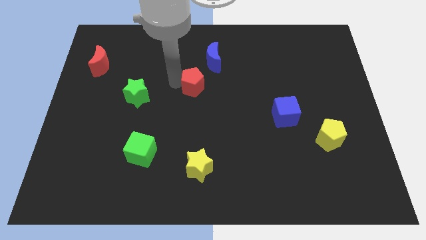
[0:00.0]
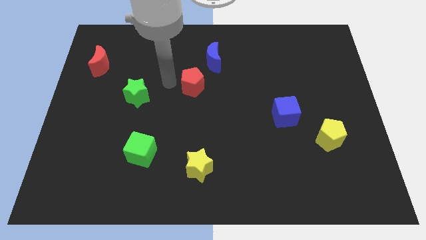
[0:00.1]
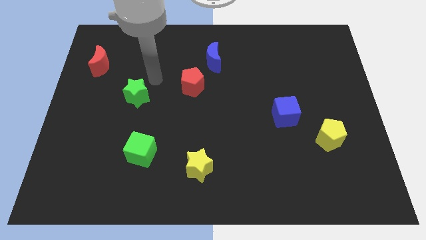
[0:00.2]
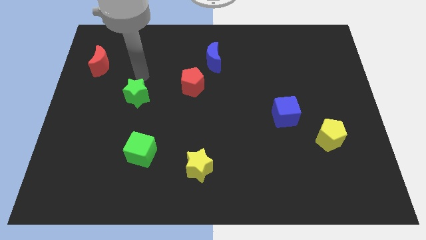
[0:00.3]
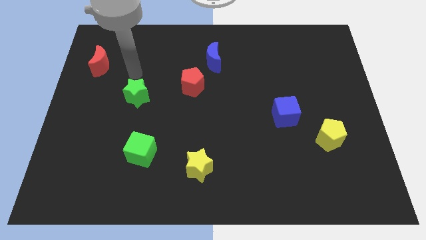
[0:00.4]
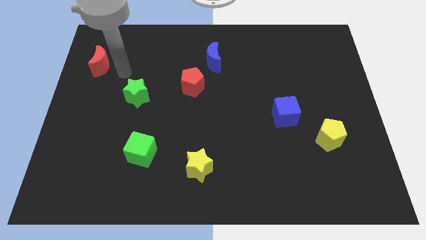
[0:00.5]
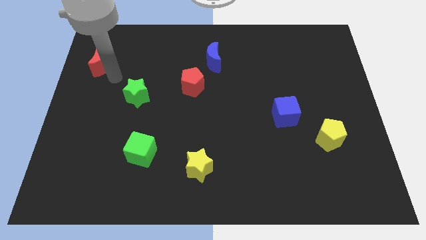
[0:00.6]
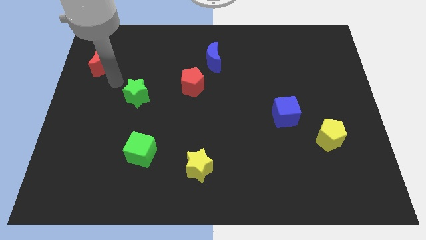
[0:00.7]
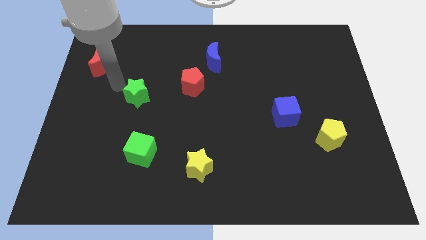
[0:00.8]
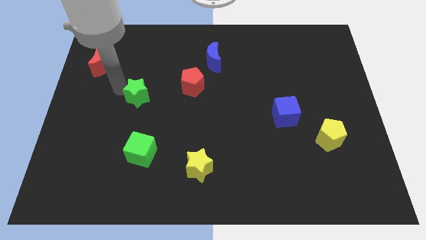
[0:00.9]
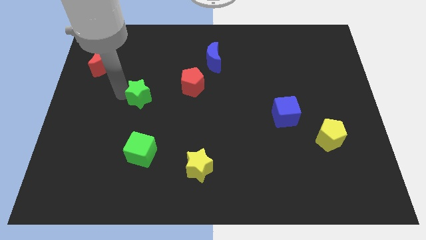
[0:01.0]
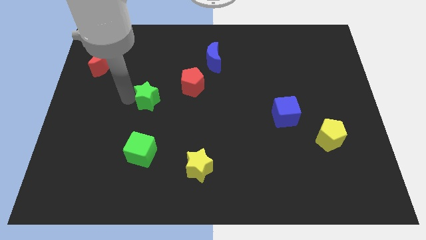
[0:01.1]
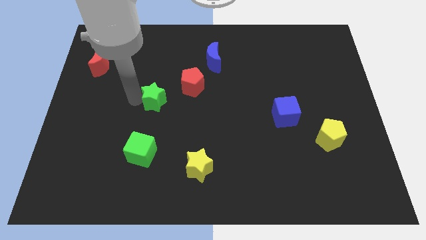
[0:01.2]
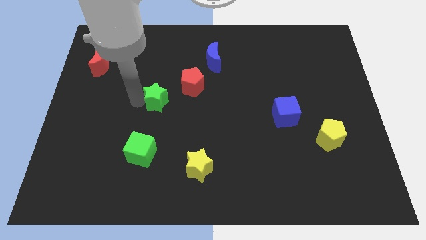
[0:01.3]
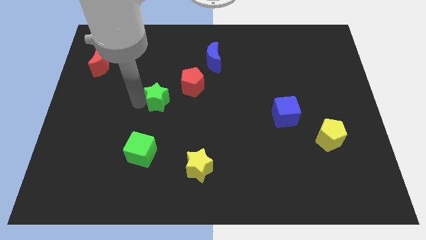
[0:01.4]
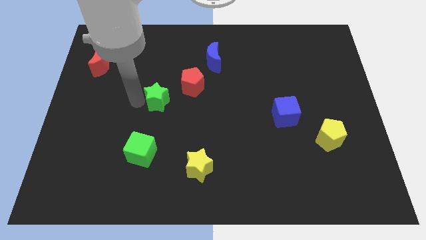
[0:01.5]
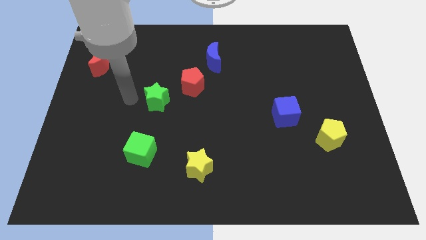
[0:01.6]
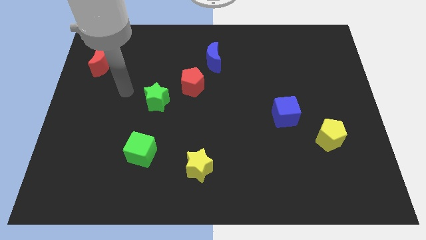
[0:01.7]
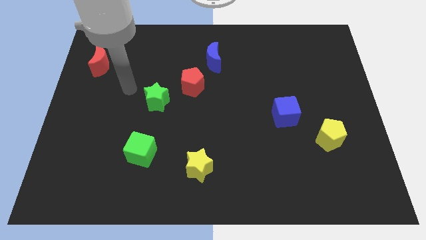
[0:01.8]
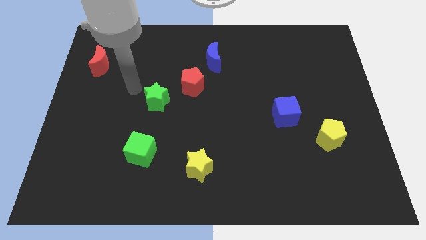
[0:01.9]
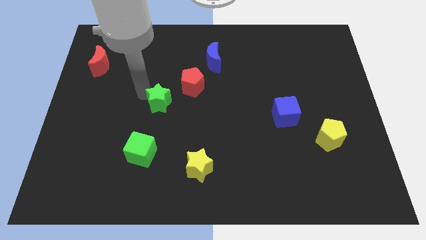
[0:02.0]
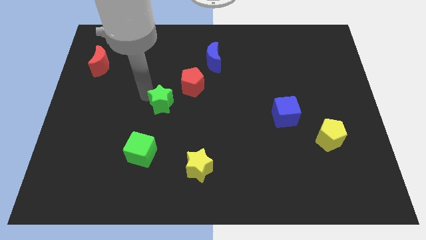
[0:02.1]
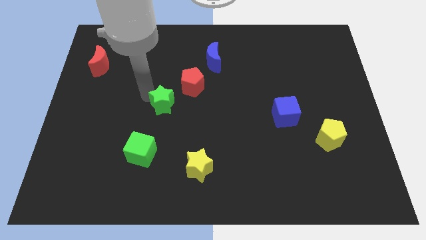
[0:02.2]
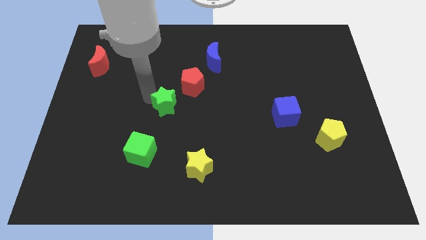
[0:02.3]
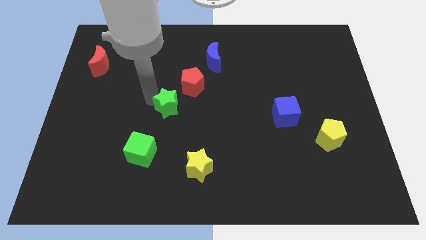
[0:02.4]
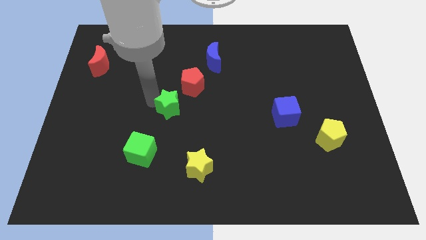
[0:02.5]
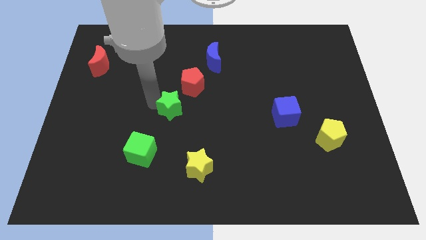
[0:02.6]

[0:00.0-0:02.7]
move your arm away from the red pentagon

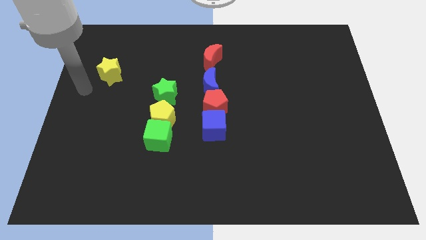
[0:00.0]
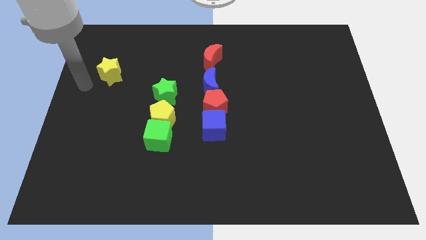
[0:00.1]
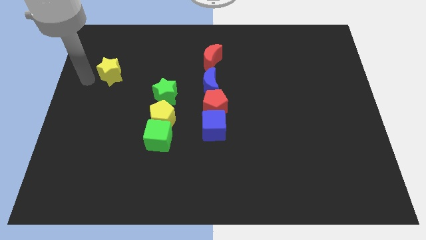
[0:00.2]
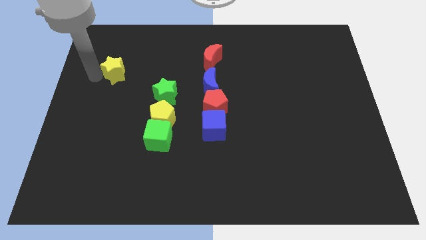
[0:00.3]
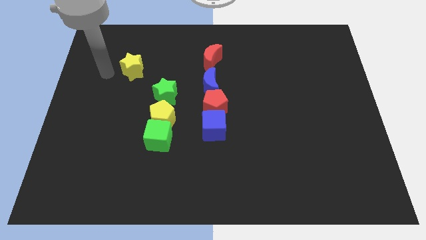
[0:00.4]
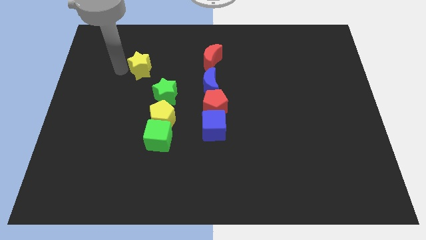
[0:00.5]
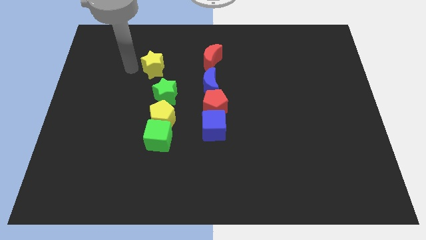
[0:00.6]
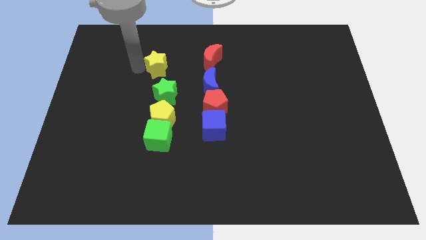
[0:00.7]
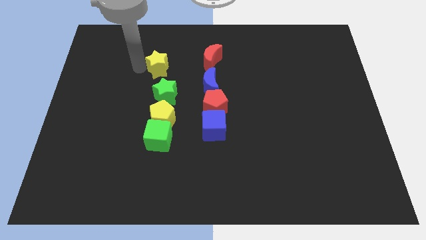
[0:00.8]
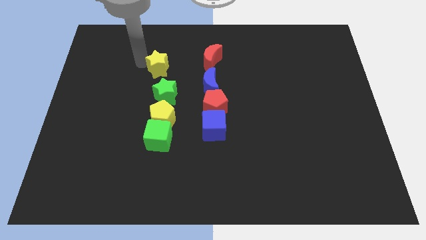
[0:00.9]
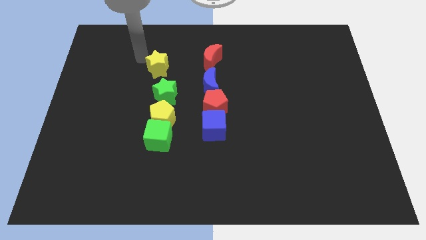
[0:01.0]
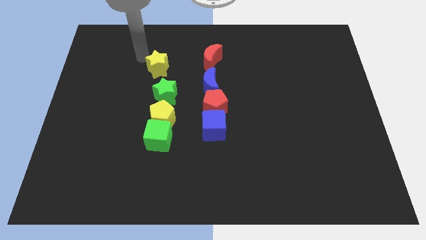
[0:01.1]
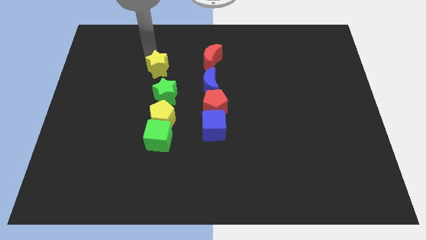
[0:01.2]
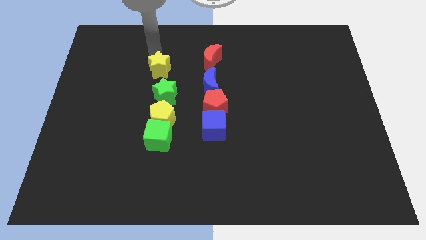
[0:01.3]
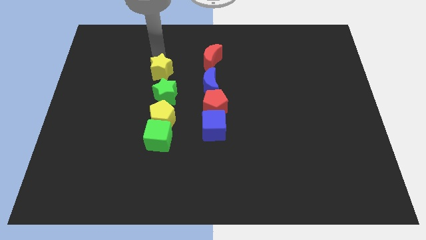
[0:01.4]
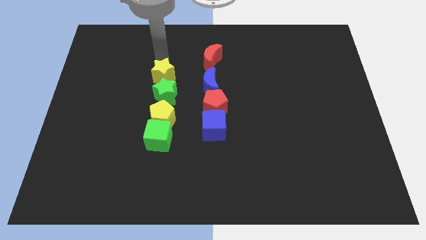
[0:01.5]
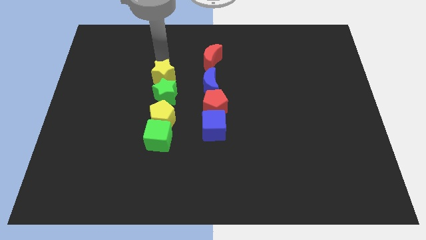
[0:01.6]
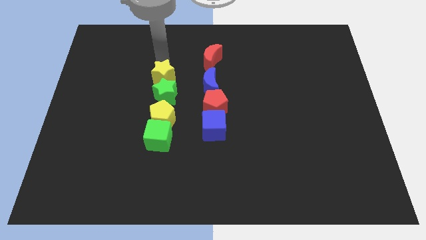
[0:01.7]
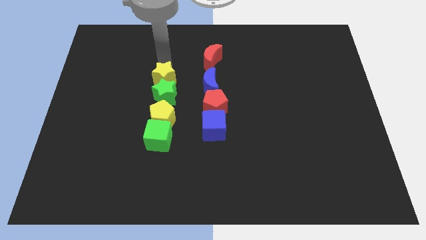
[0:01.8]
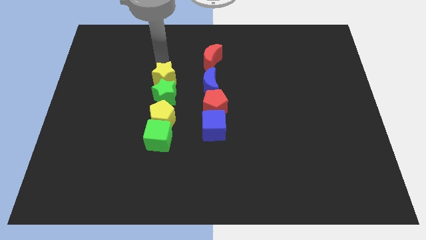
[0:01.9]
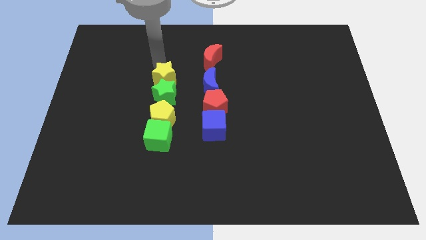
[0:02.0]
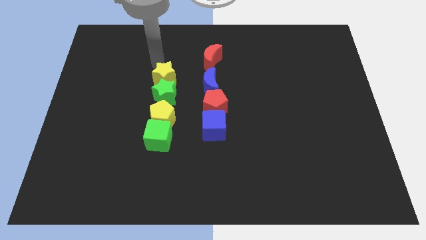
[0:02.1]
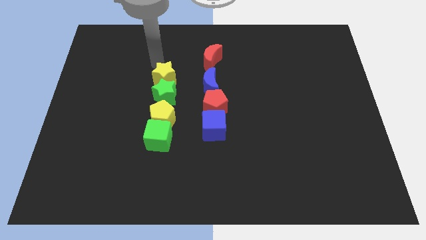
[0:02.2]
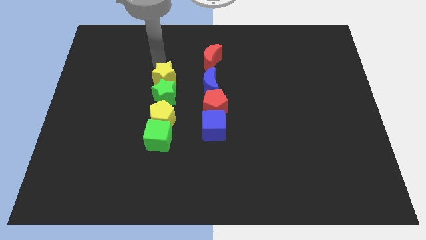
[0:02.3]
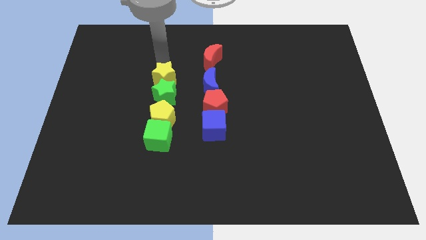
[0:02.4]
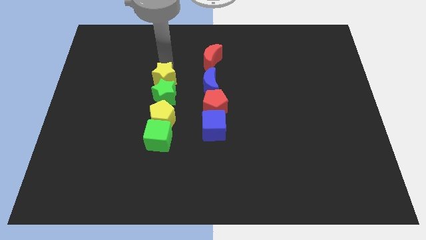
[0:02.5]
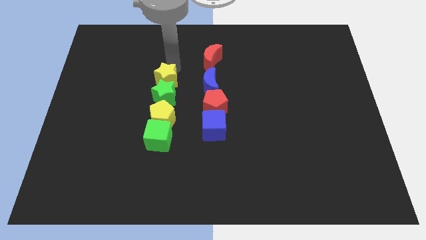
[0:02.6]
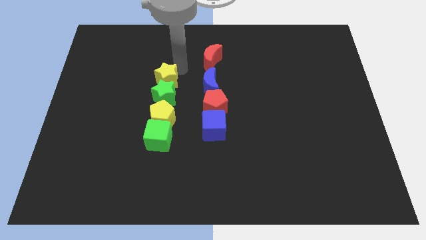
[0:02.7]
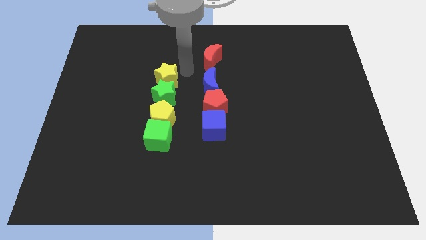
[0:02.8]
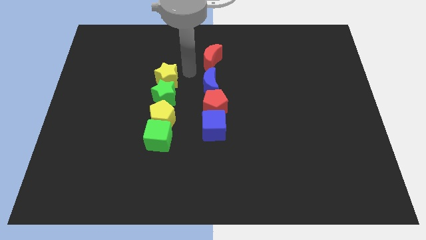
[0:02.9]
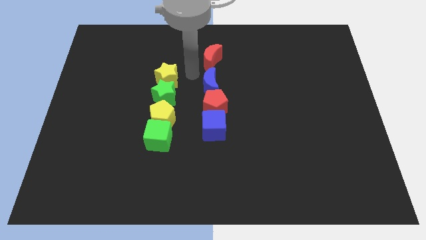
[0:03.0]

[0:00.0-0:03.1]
push the yellow star left to the blue crescent

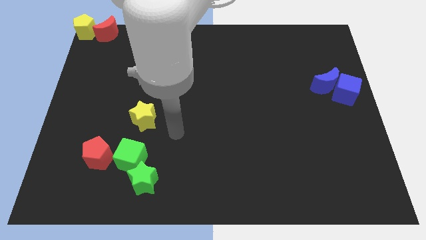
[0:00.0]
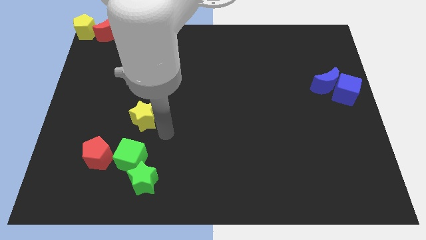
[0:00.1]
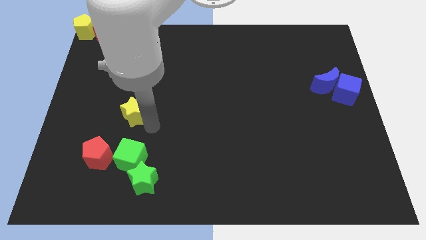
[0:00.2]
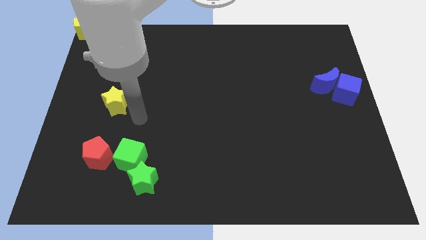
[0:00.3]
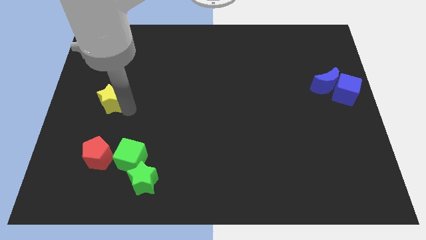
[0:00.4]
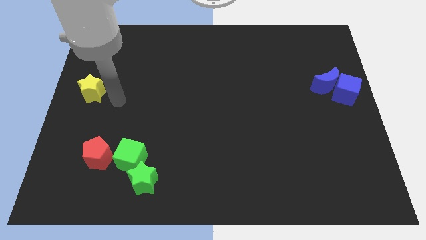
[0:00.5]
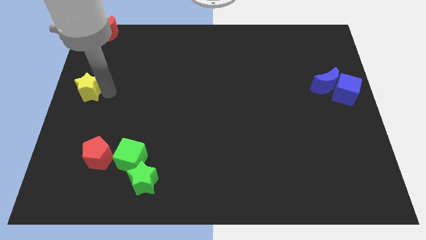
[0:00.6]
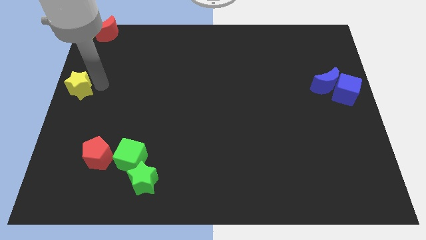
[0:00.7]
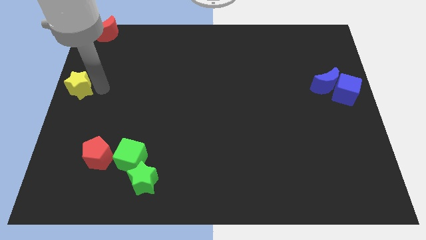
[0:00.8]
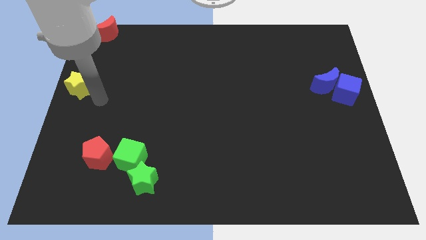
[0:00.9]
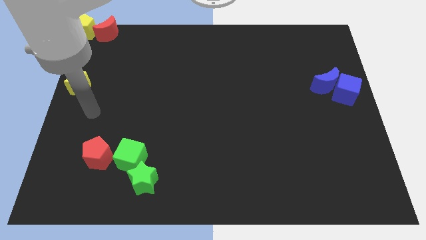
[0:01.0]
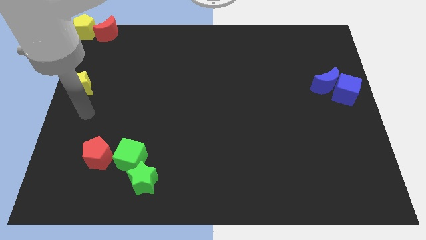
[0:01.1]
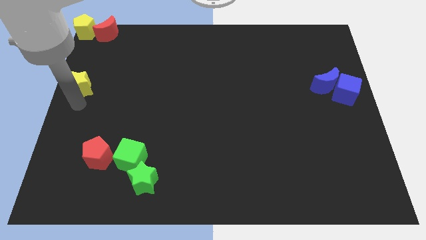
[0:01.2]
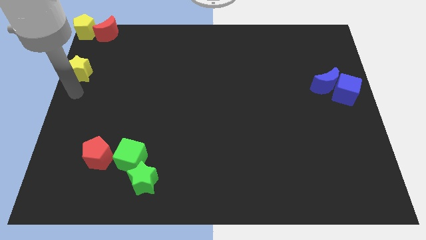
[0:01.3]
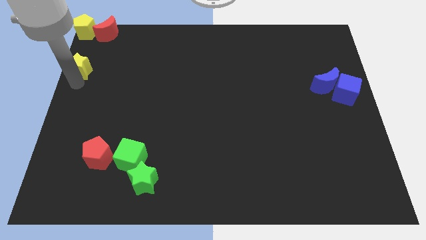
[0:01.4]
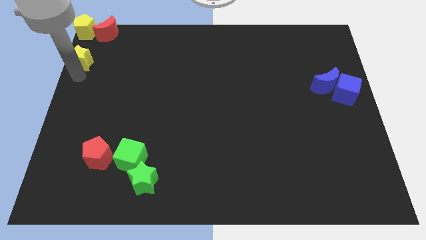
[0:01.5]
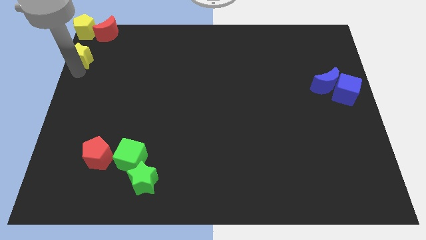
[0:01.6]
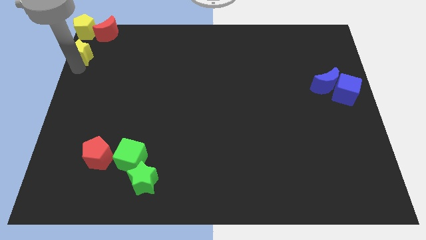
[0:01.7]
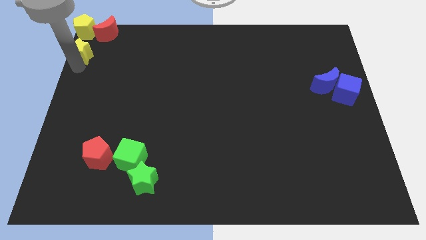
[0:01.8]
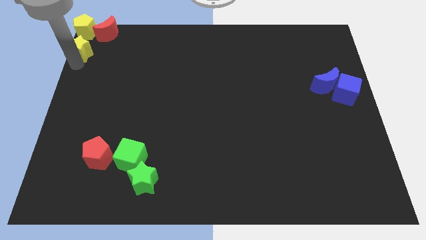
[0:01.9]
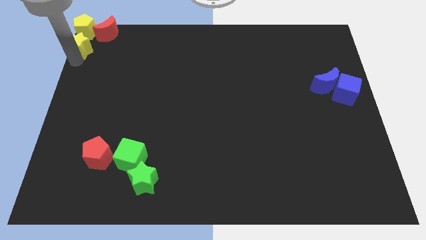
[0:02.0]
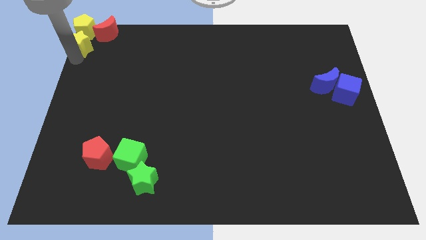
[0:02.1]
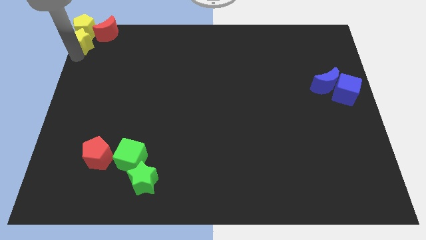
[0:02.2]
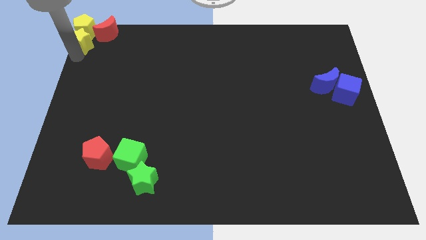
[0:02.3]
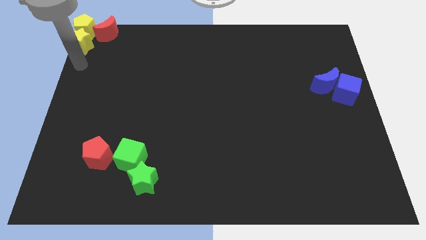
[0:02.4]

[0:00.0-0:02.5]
move the yellow star into the yellow pentagon

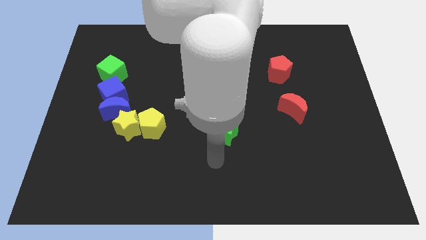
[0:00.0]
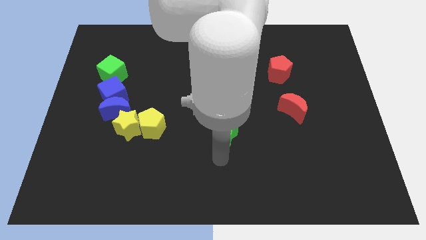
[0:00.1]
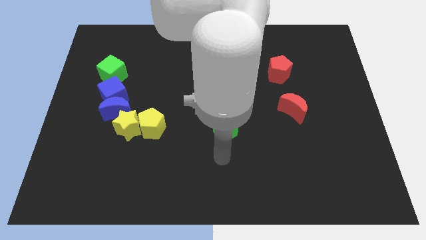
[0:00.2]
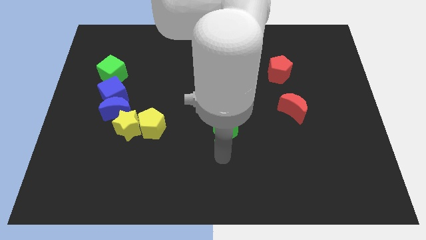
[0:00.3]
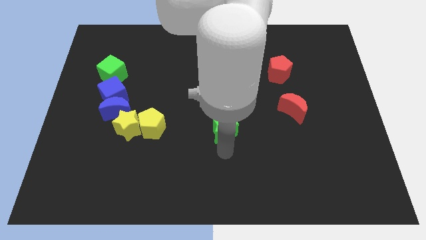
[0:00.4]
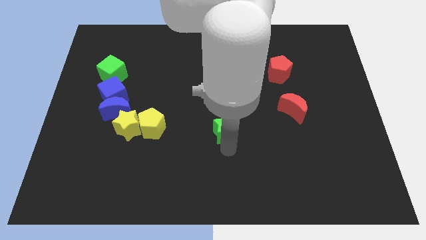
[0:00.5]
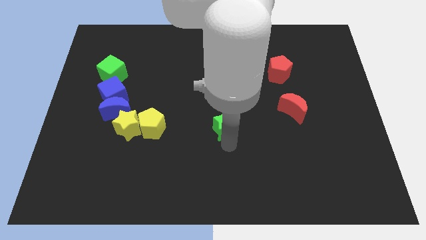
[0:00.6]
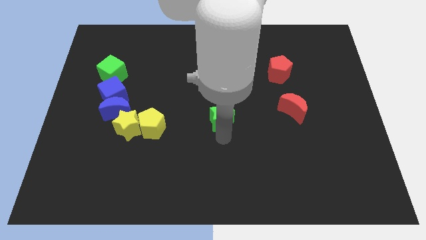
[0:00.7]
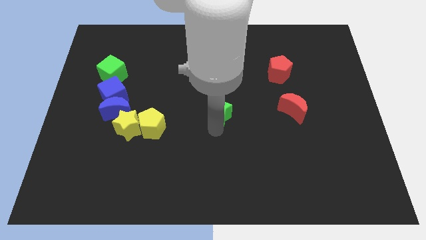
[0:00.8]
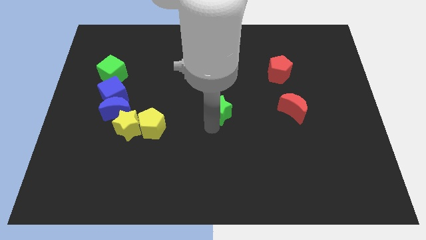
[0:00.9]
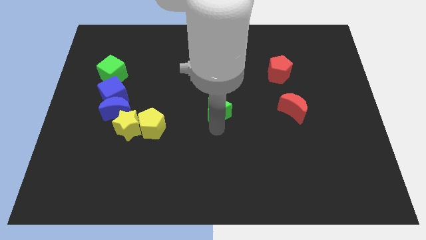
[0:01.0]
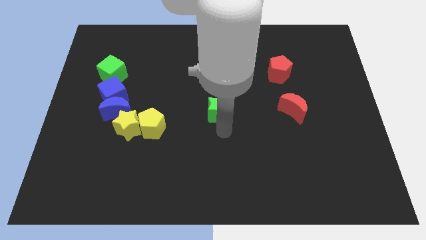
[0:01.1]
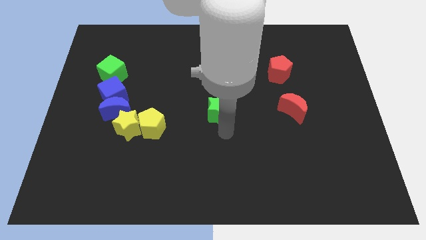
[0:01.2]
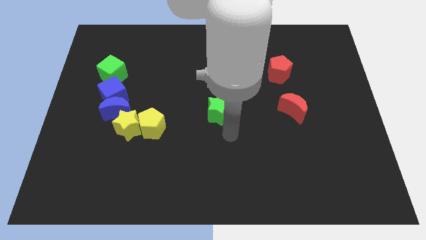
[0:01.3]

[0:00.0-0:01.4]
move the green star slightly up
